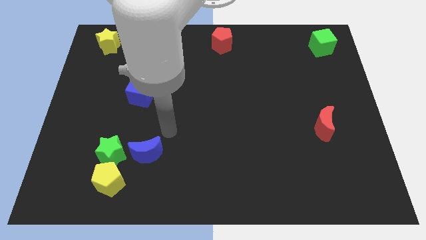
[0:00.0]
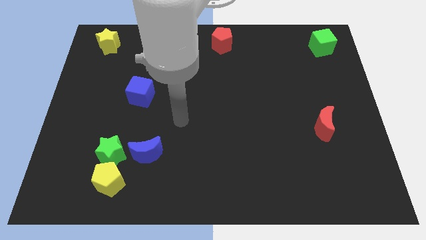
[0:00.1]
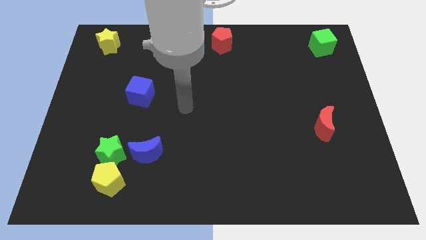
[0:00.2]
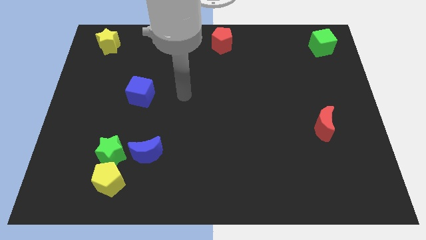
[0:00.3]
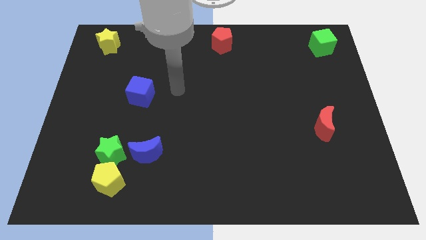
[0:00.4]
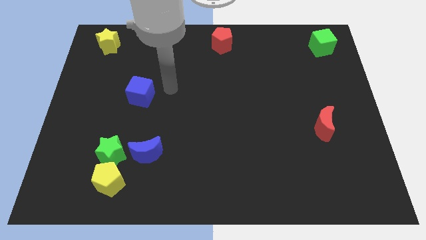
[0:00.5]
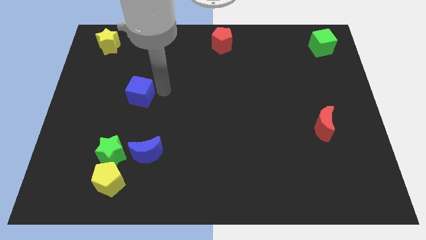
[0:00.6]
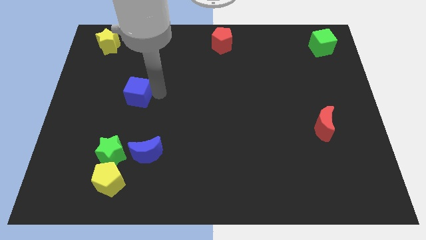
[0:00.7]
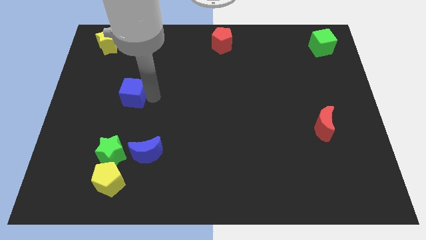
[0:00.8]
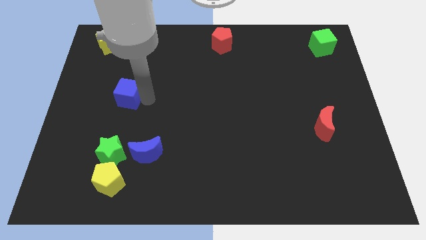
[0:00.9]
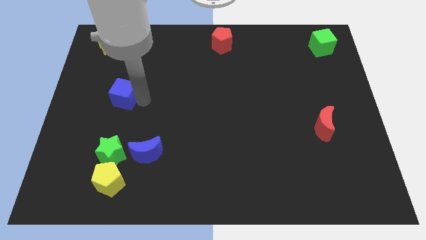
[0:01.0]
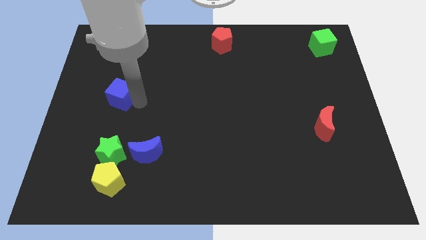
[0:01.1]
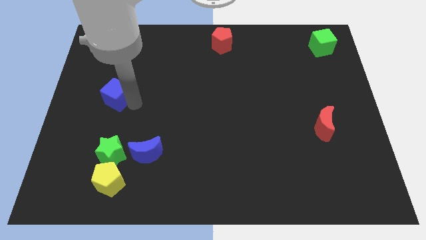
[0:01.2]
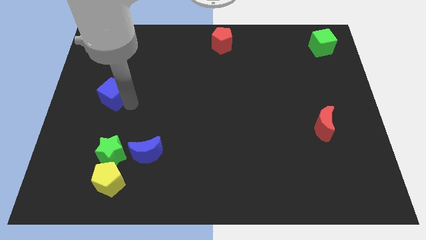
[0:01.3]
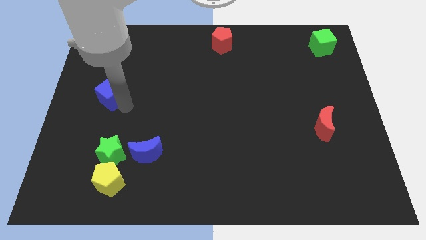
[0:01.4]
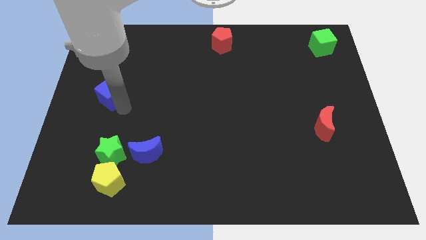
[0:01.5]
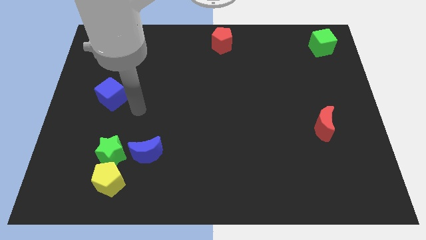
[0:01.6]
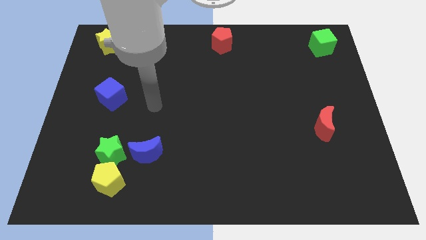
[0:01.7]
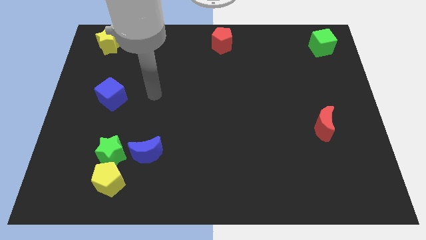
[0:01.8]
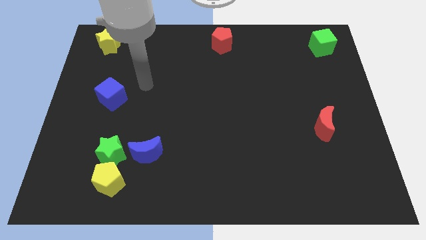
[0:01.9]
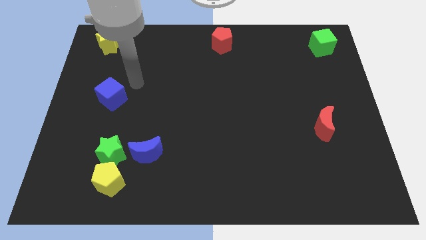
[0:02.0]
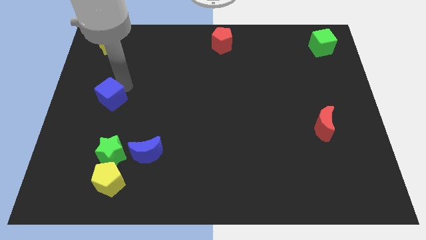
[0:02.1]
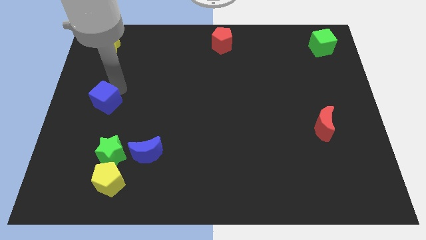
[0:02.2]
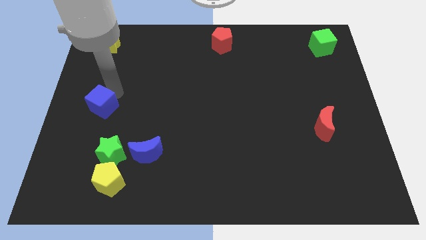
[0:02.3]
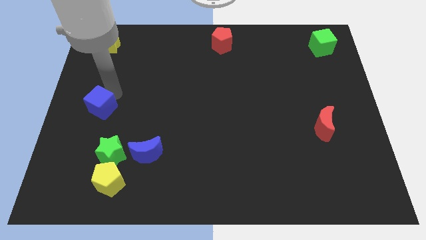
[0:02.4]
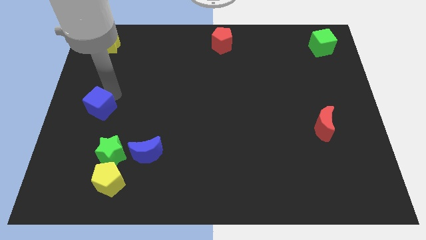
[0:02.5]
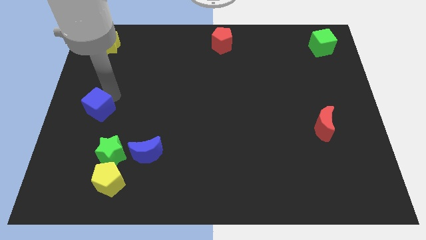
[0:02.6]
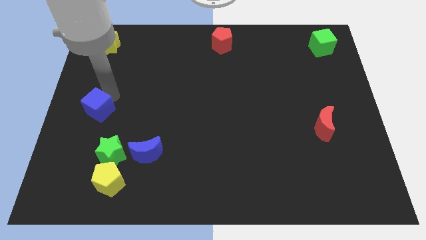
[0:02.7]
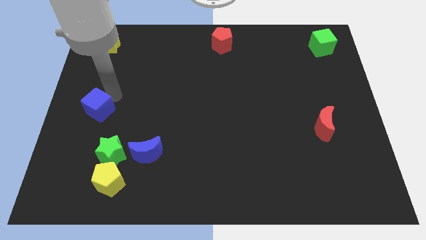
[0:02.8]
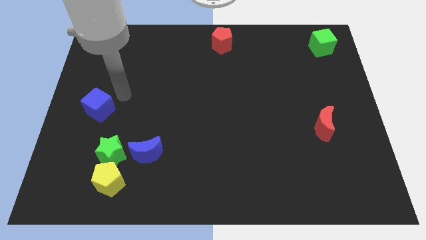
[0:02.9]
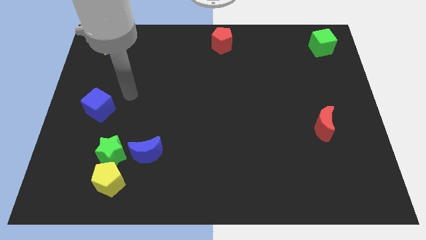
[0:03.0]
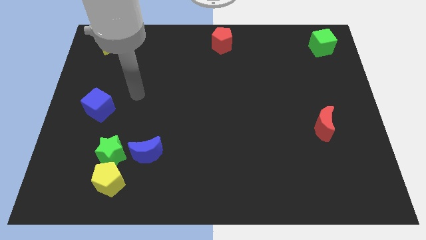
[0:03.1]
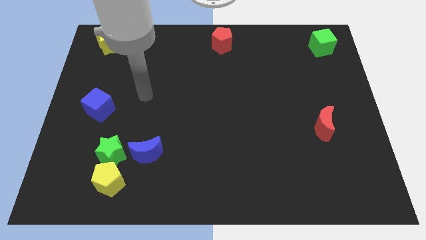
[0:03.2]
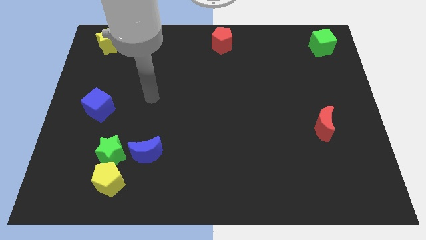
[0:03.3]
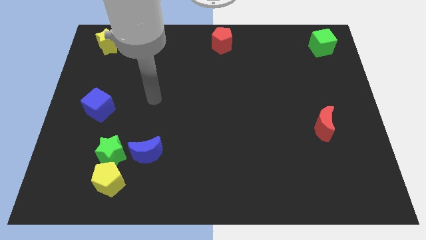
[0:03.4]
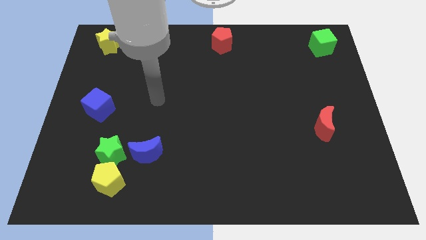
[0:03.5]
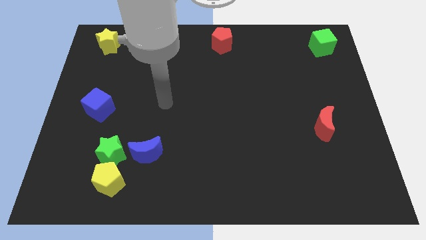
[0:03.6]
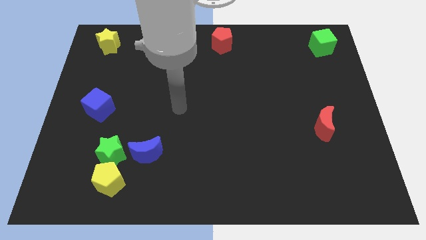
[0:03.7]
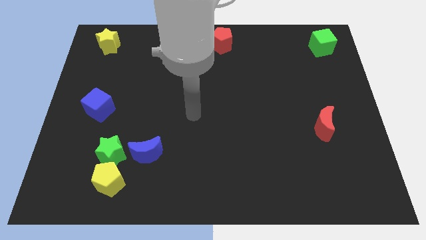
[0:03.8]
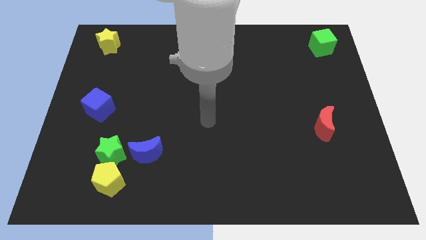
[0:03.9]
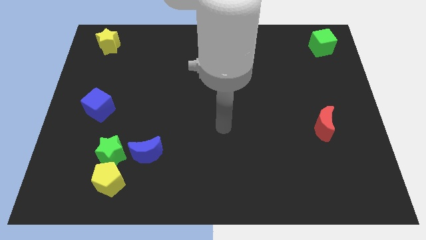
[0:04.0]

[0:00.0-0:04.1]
move the blue cube towards the left side of the board

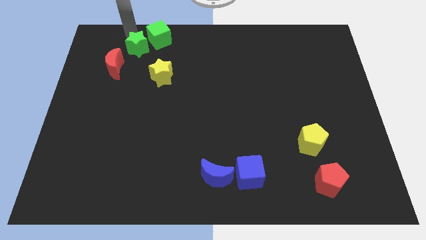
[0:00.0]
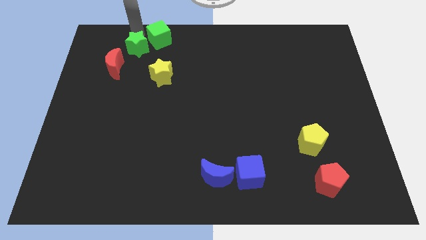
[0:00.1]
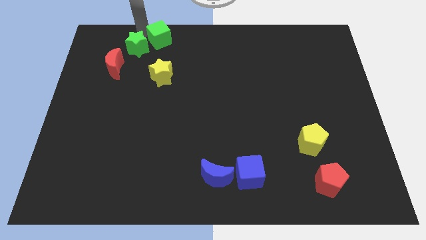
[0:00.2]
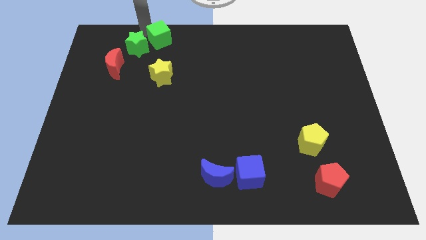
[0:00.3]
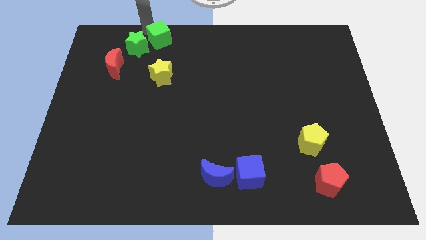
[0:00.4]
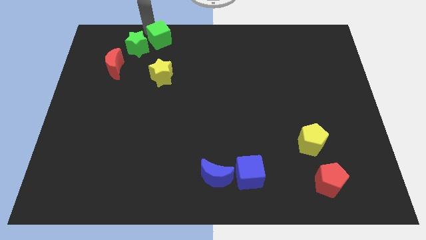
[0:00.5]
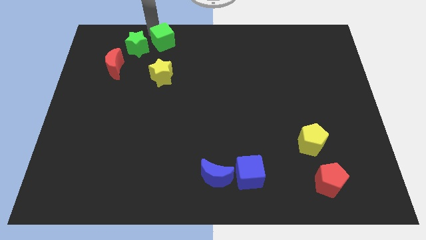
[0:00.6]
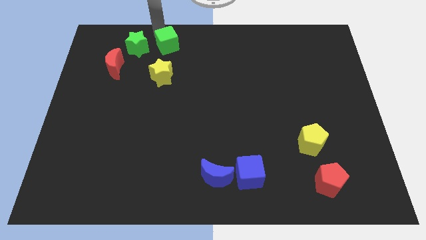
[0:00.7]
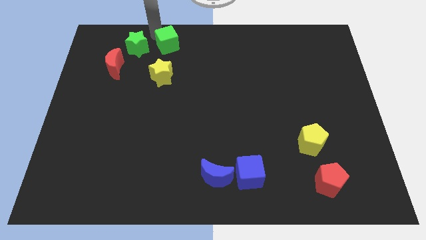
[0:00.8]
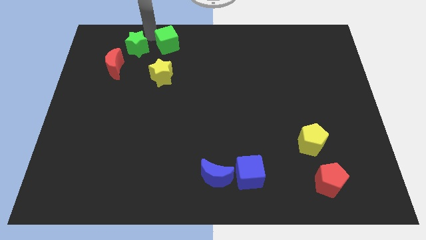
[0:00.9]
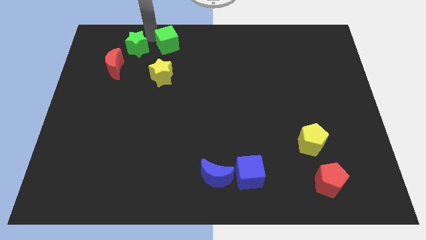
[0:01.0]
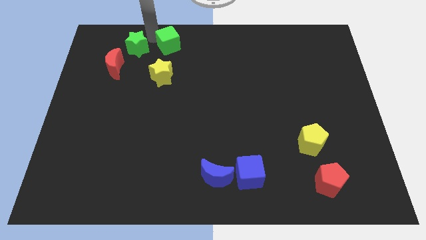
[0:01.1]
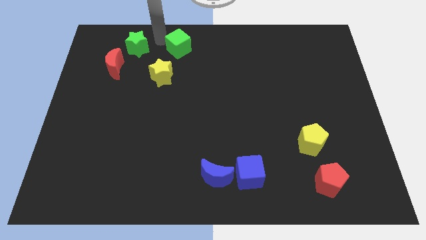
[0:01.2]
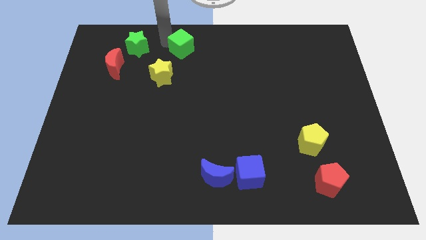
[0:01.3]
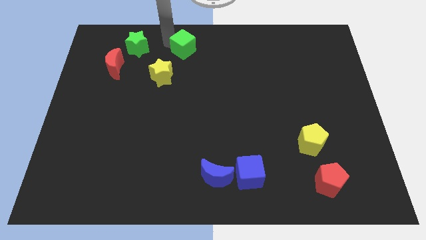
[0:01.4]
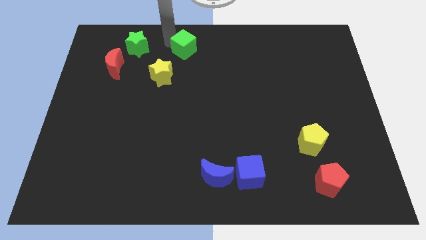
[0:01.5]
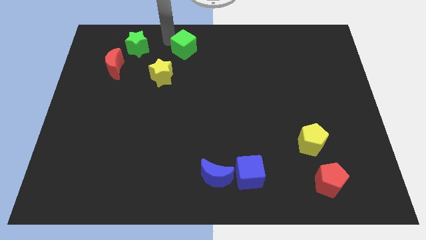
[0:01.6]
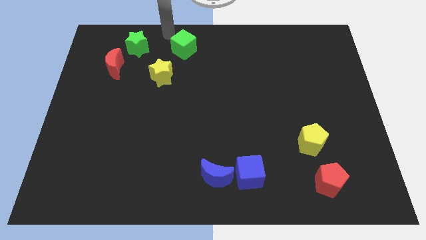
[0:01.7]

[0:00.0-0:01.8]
move the green cube slightly down

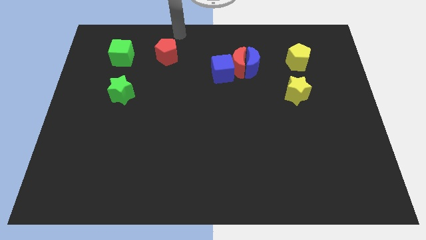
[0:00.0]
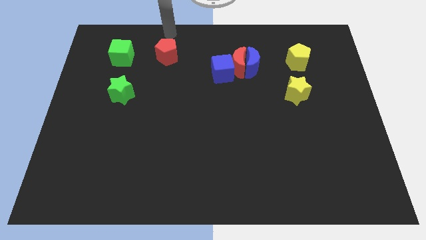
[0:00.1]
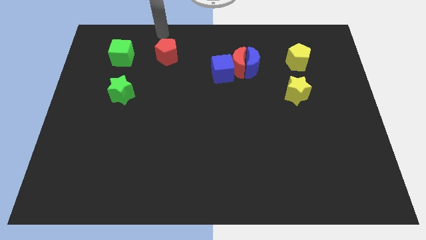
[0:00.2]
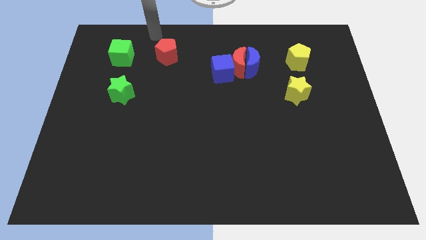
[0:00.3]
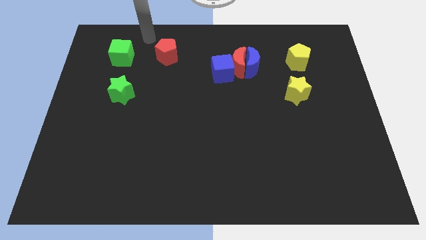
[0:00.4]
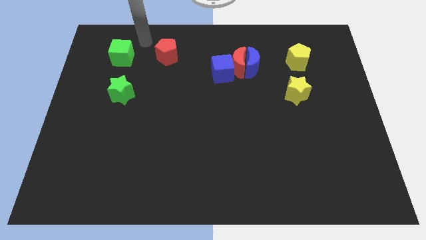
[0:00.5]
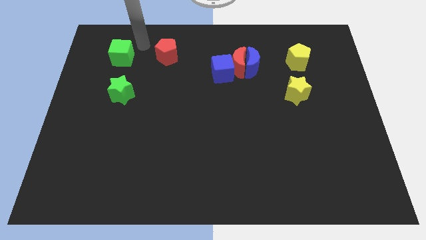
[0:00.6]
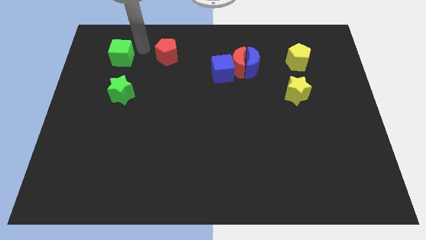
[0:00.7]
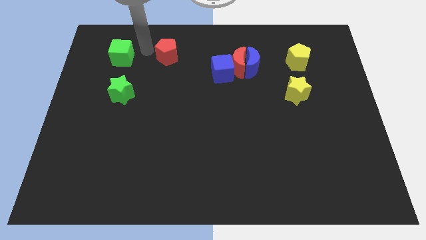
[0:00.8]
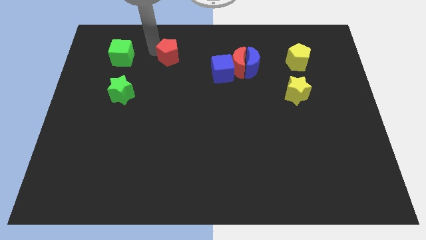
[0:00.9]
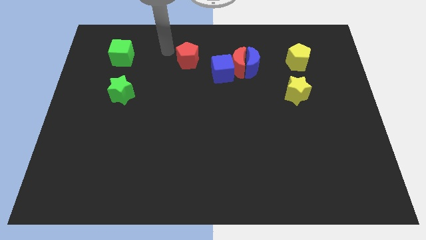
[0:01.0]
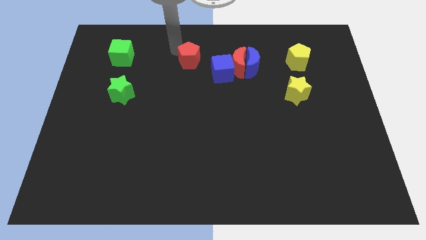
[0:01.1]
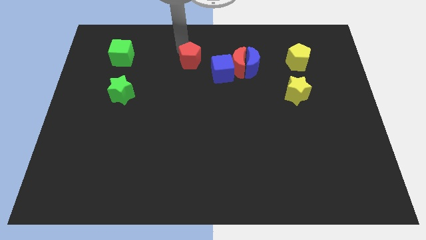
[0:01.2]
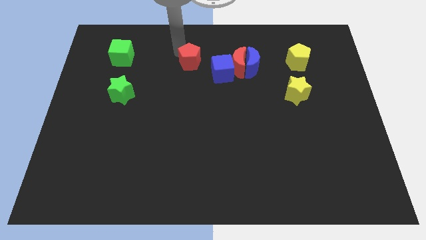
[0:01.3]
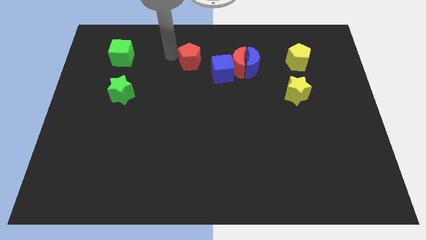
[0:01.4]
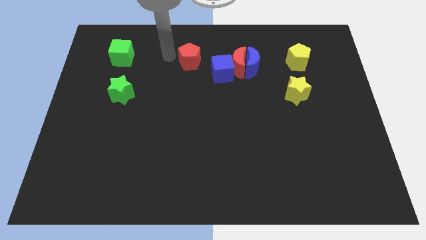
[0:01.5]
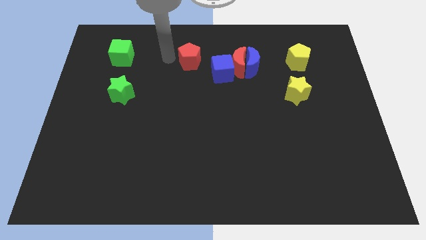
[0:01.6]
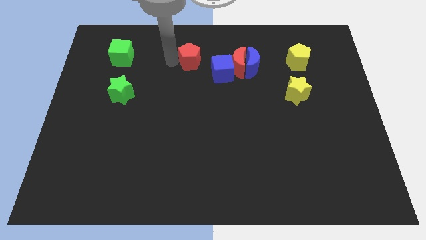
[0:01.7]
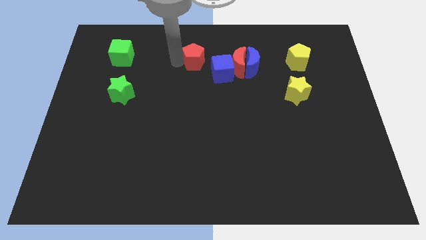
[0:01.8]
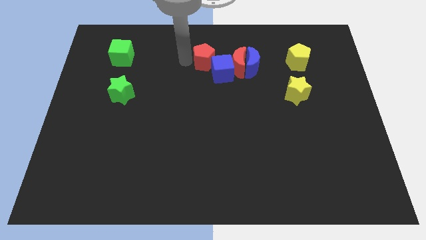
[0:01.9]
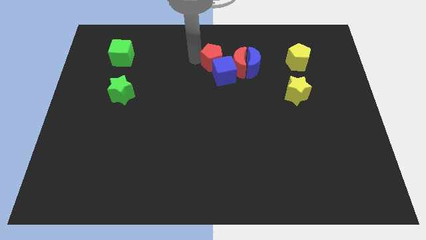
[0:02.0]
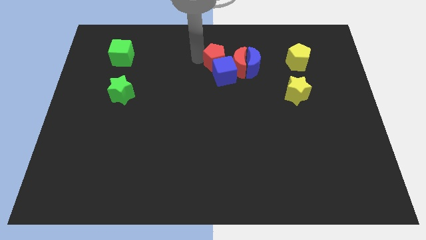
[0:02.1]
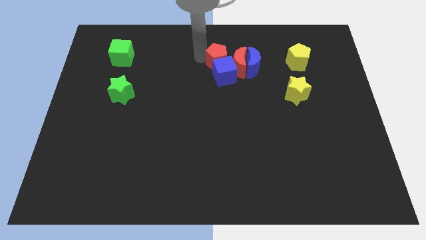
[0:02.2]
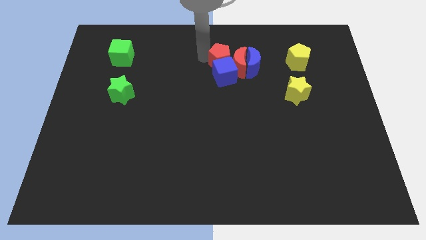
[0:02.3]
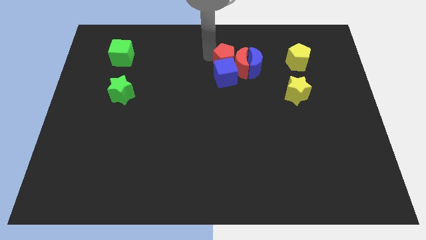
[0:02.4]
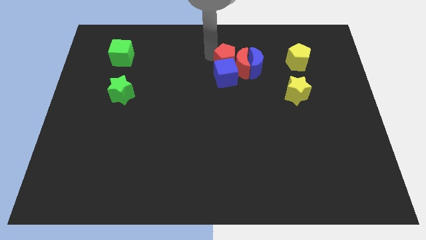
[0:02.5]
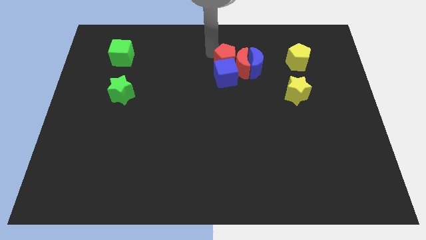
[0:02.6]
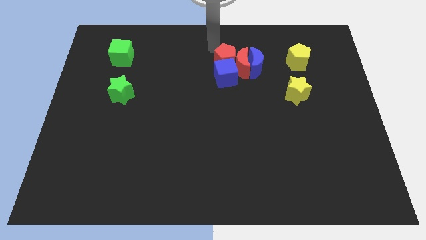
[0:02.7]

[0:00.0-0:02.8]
push red pentagon towards red half moon

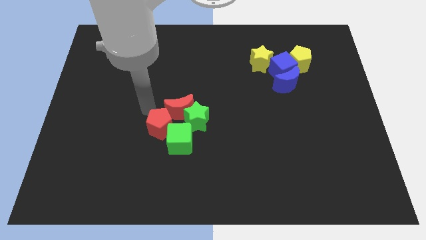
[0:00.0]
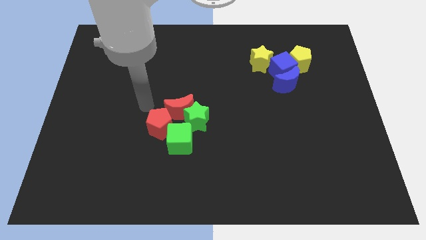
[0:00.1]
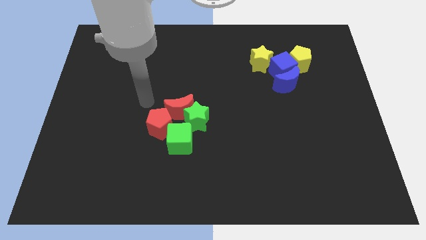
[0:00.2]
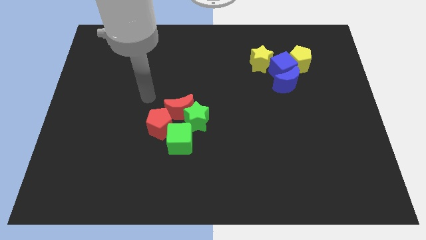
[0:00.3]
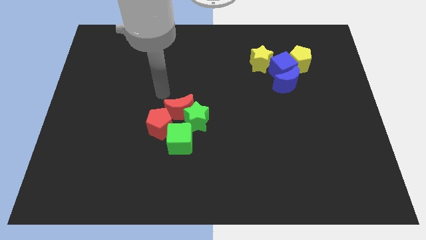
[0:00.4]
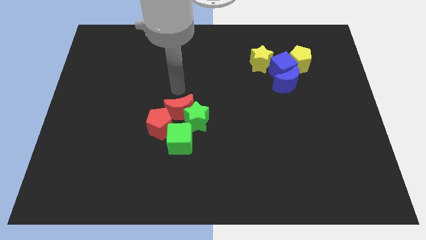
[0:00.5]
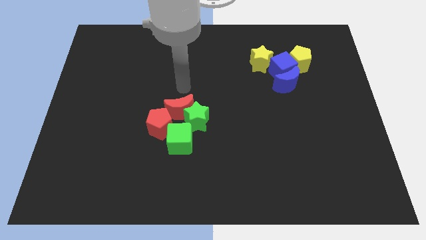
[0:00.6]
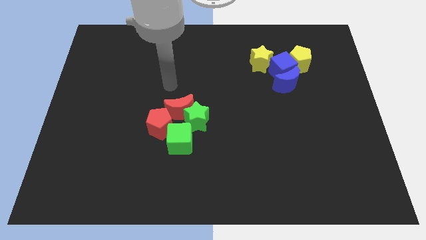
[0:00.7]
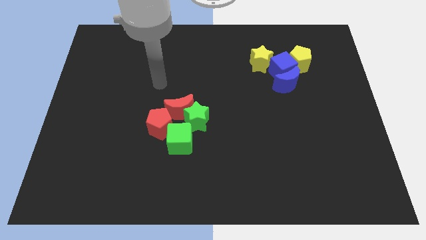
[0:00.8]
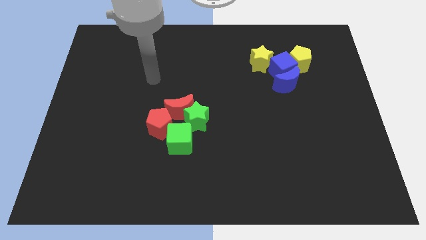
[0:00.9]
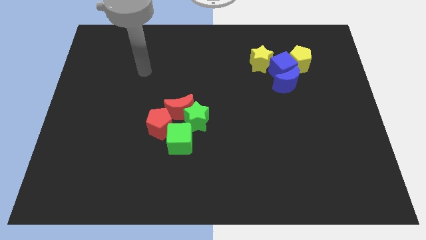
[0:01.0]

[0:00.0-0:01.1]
move the arm away from the red pentagon
